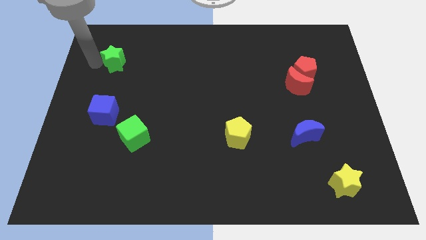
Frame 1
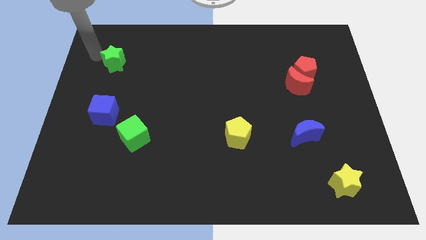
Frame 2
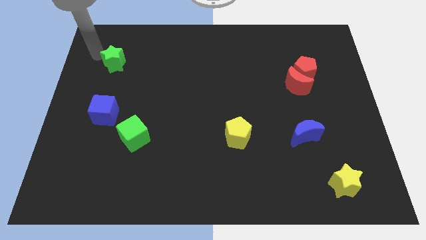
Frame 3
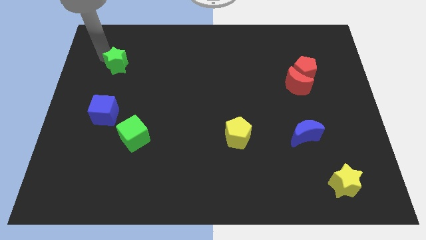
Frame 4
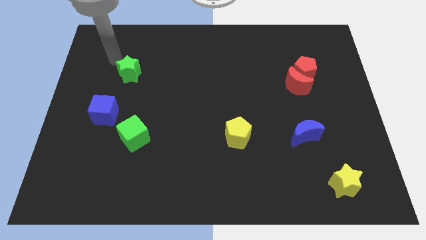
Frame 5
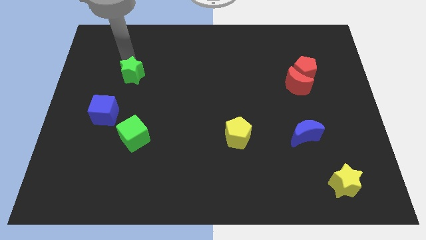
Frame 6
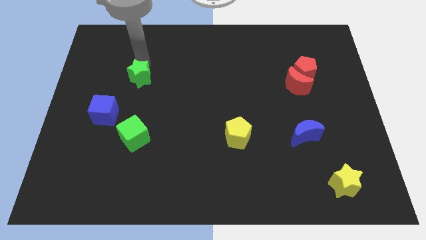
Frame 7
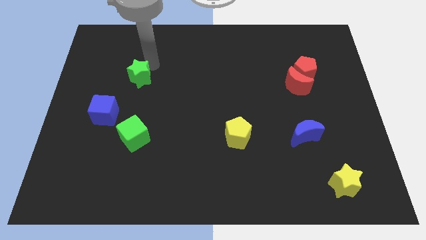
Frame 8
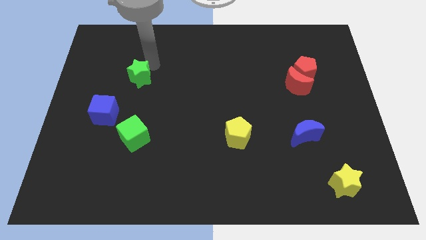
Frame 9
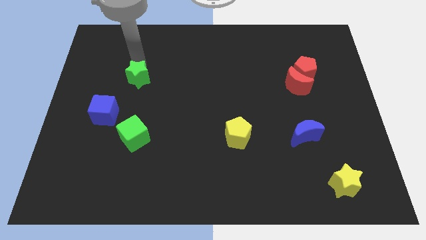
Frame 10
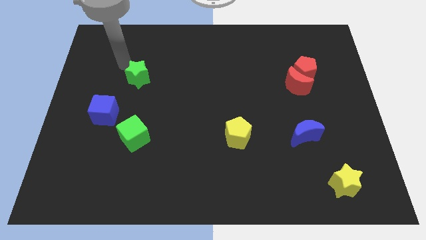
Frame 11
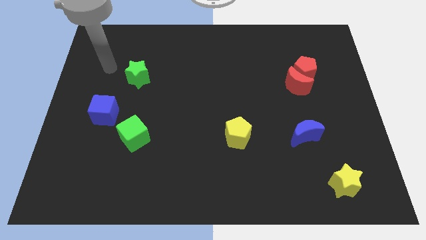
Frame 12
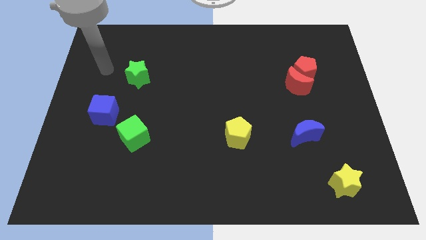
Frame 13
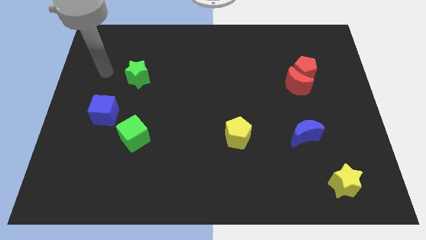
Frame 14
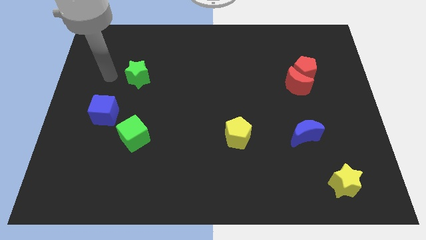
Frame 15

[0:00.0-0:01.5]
place green star to the top right of blue cube

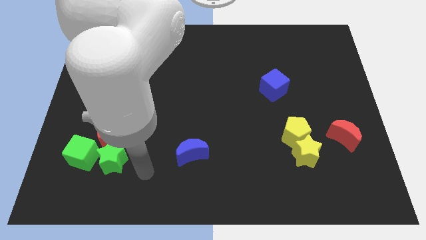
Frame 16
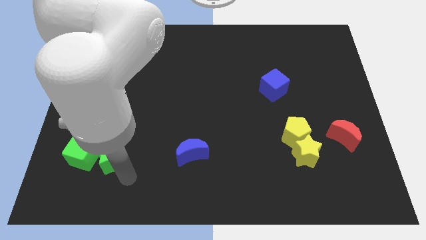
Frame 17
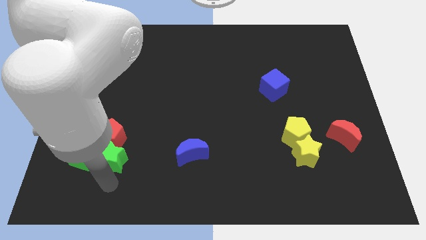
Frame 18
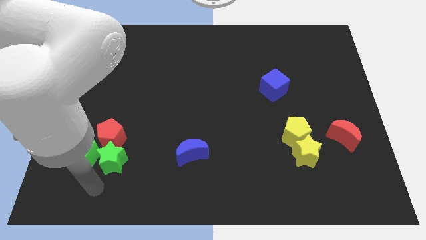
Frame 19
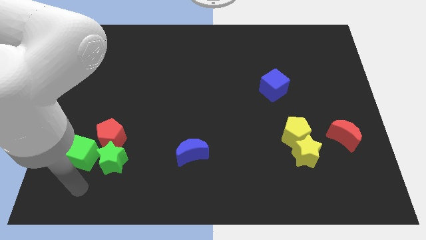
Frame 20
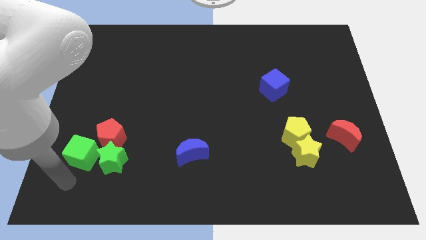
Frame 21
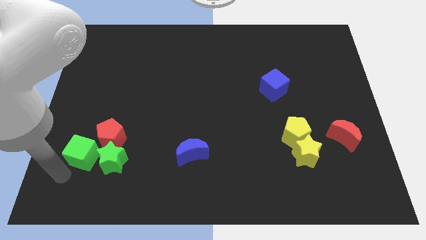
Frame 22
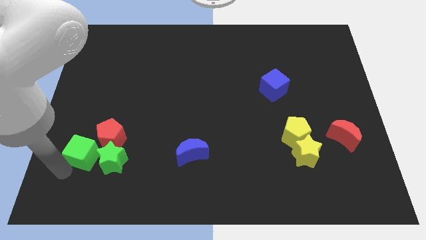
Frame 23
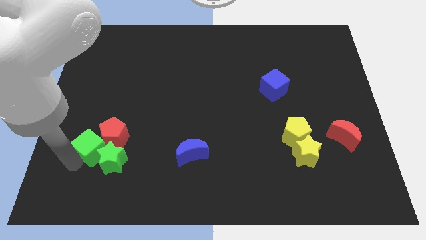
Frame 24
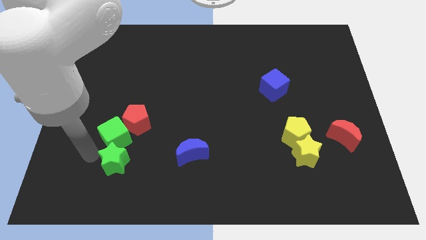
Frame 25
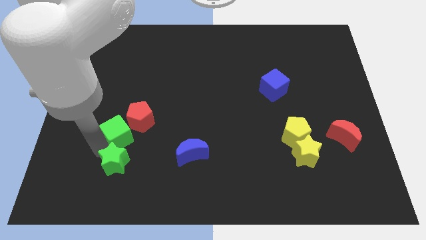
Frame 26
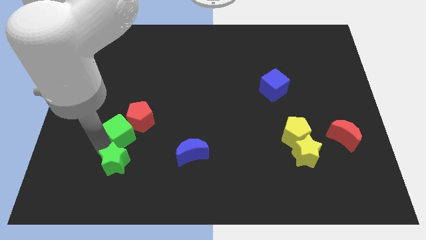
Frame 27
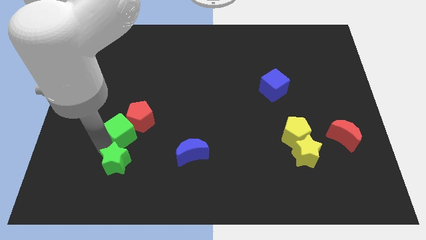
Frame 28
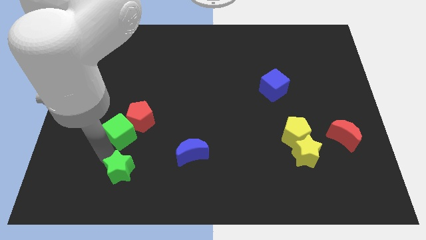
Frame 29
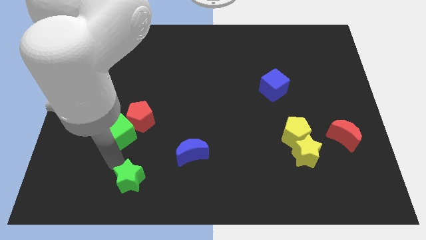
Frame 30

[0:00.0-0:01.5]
separate the green star from the green cube

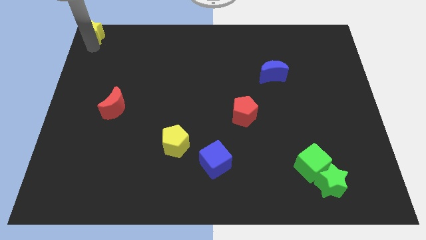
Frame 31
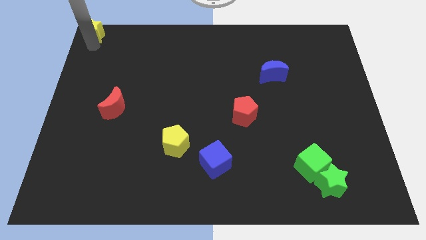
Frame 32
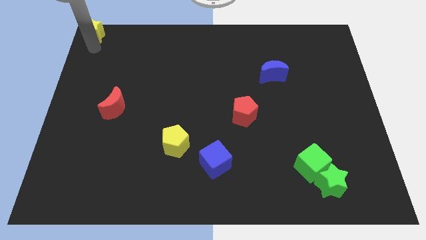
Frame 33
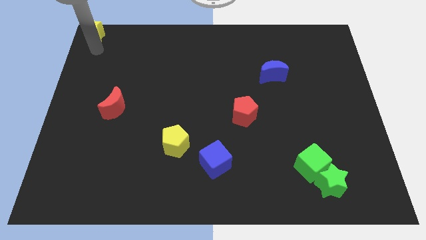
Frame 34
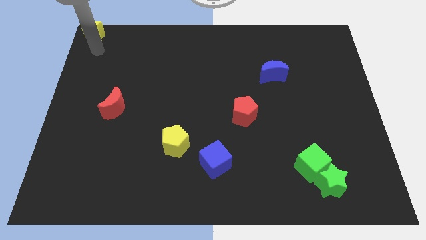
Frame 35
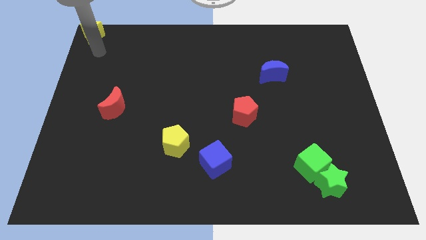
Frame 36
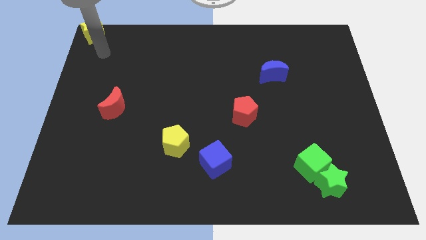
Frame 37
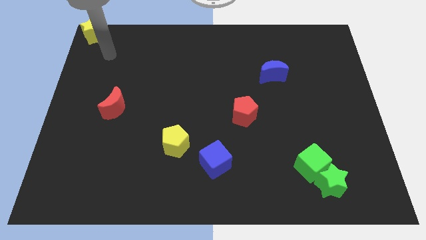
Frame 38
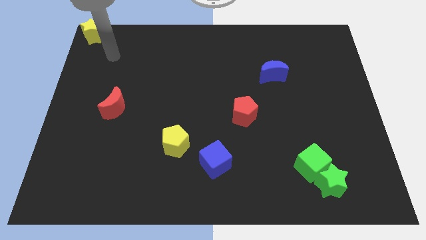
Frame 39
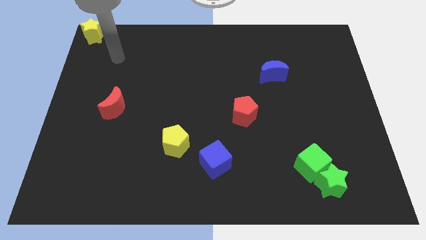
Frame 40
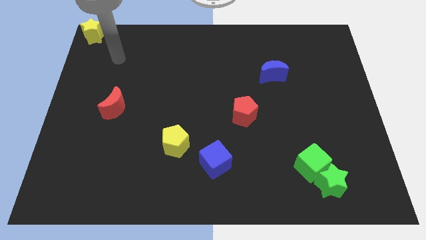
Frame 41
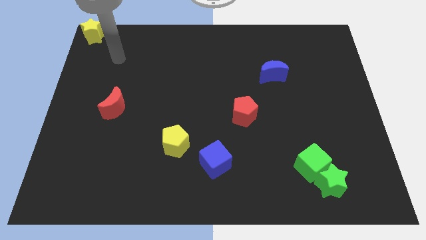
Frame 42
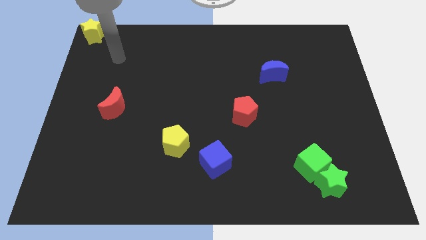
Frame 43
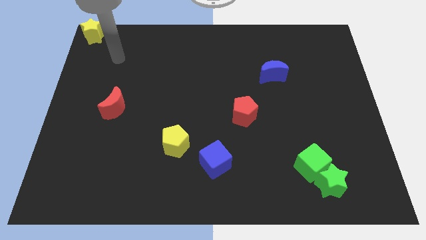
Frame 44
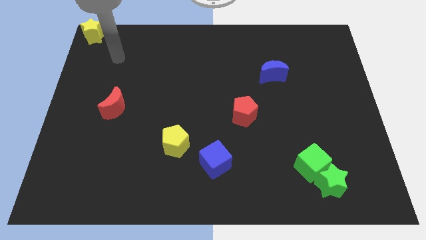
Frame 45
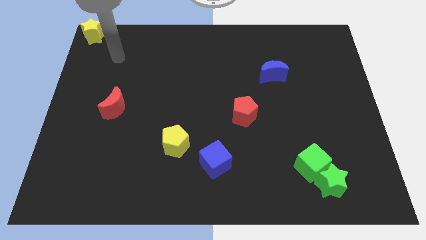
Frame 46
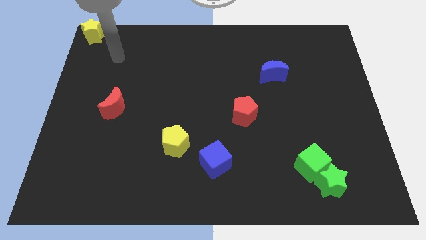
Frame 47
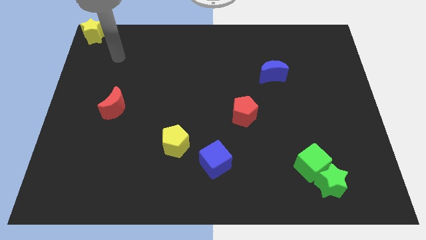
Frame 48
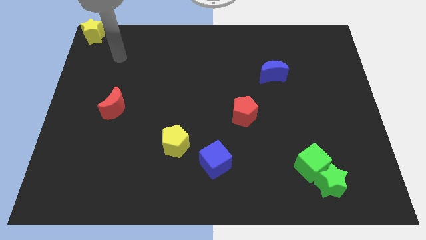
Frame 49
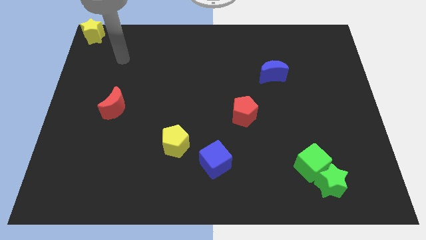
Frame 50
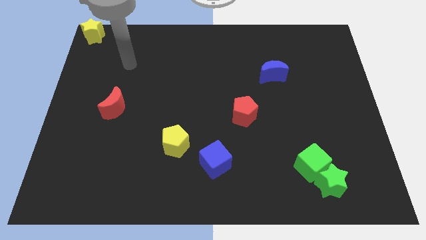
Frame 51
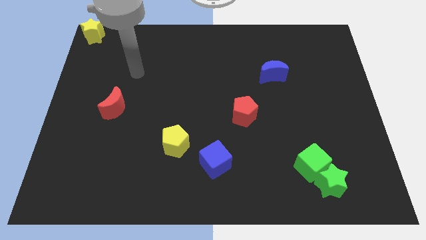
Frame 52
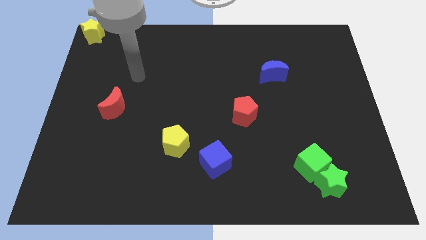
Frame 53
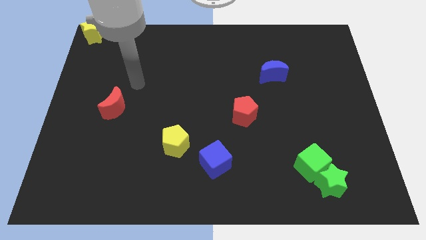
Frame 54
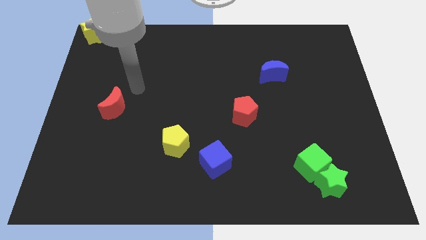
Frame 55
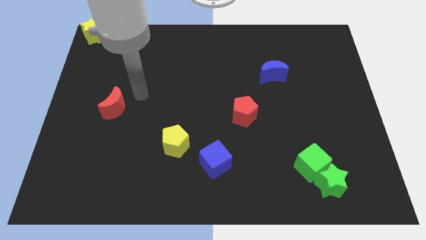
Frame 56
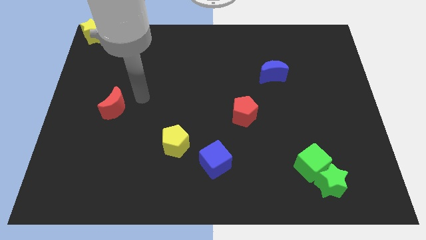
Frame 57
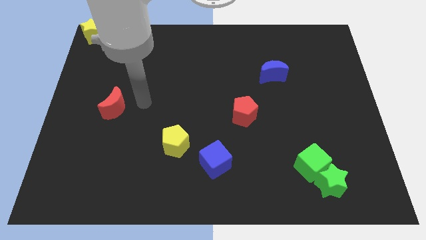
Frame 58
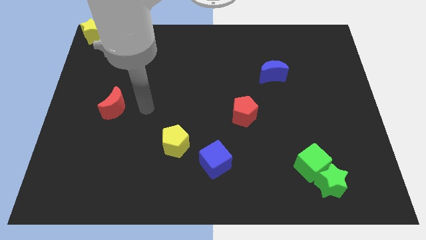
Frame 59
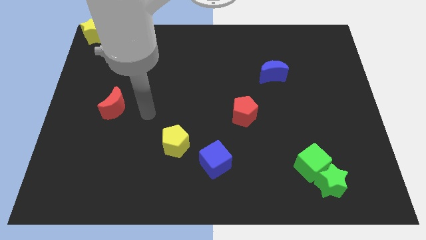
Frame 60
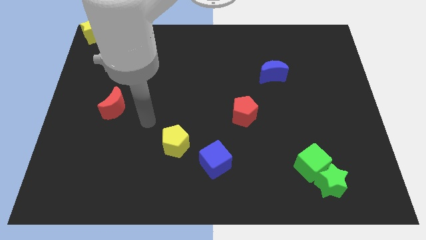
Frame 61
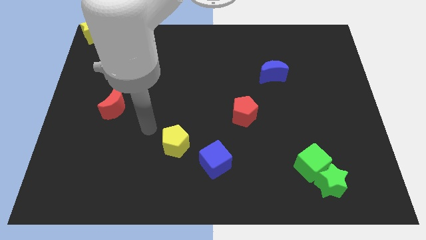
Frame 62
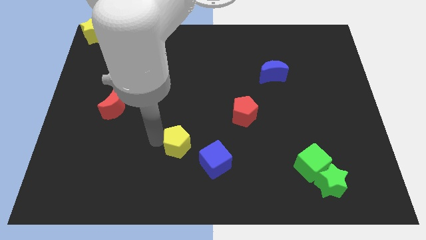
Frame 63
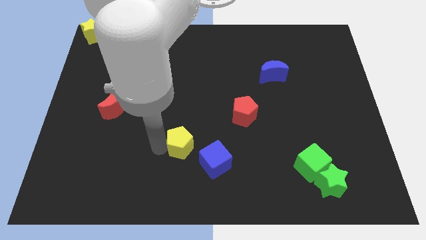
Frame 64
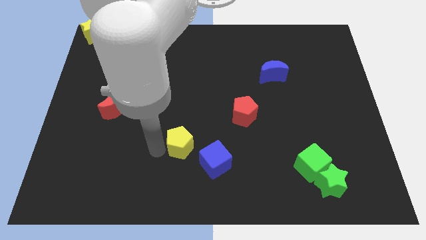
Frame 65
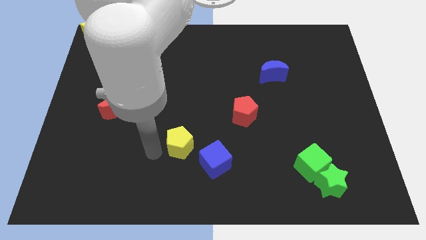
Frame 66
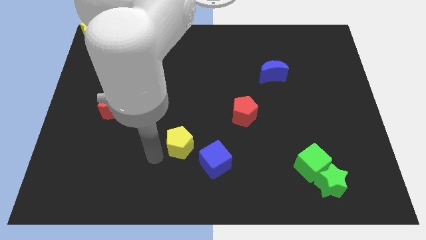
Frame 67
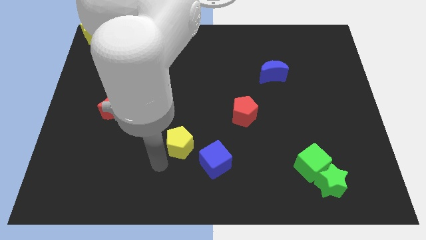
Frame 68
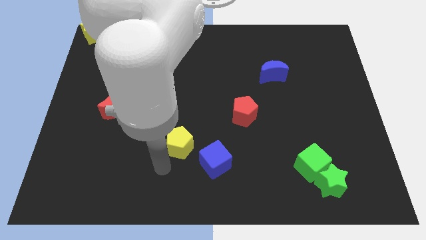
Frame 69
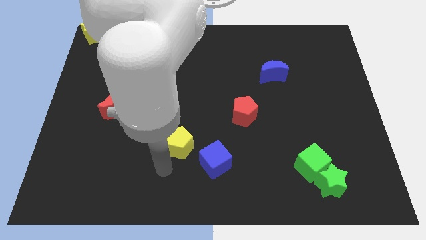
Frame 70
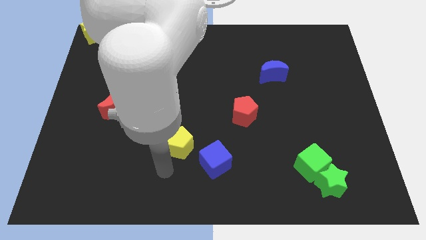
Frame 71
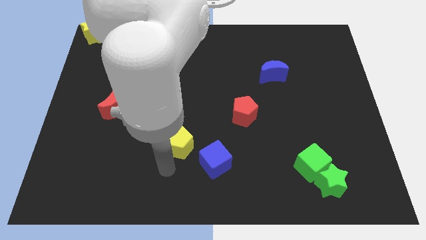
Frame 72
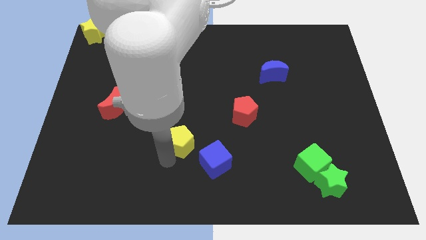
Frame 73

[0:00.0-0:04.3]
move the arm away from the yellow star

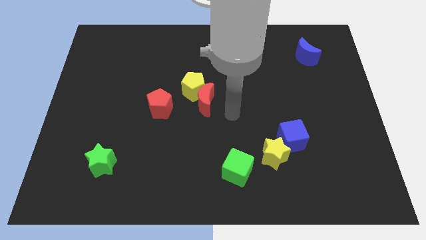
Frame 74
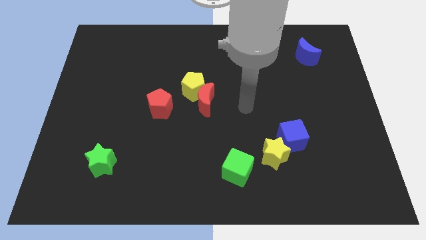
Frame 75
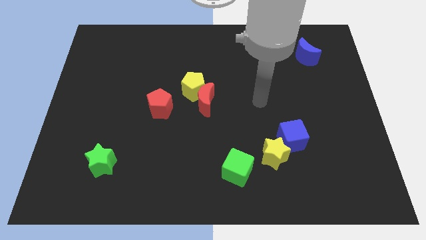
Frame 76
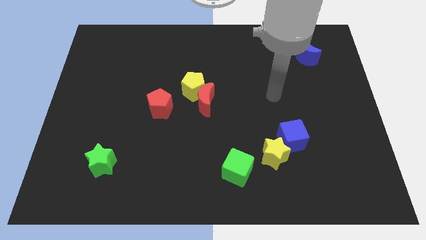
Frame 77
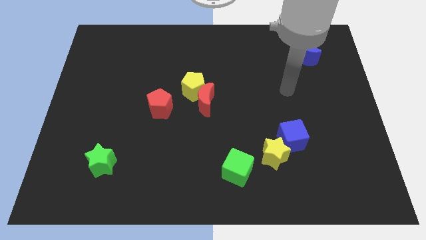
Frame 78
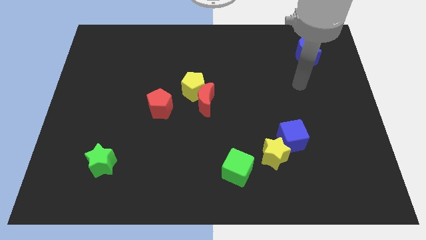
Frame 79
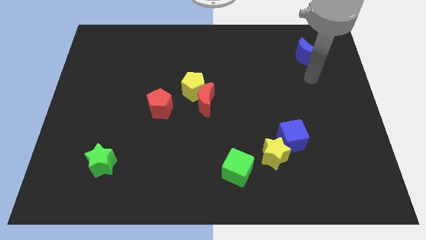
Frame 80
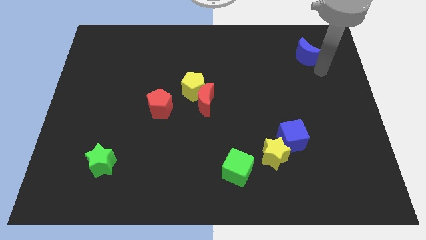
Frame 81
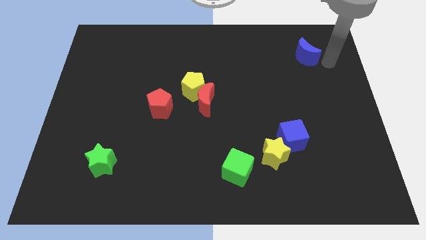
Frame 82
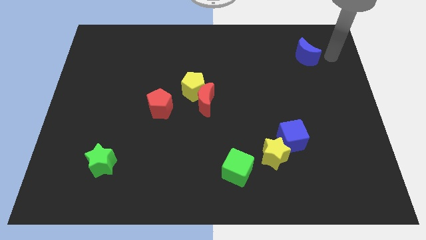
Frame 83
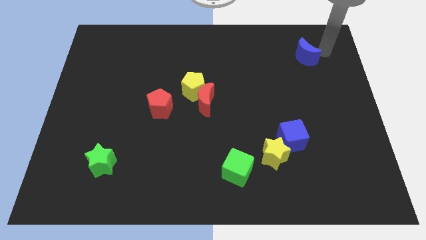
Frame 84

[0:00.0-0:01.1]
slide the arm close to blue moon

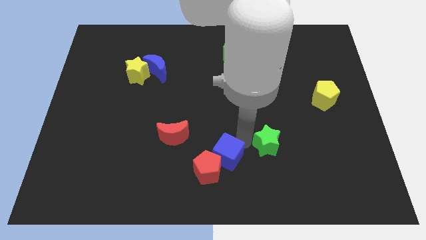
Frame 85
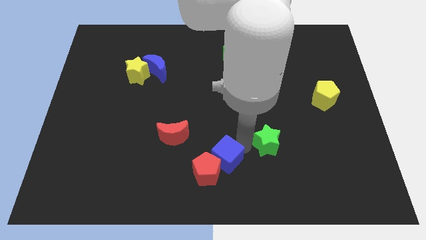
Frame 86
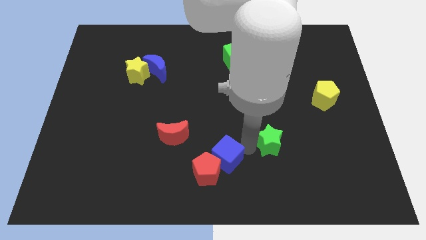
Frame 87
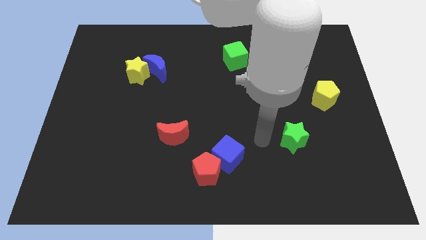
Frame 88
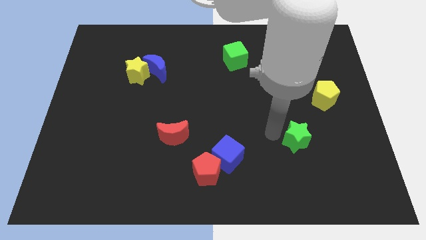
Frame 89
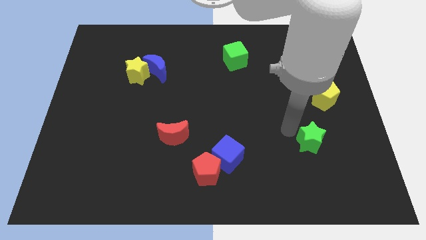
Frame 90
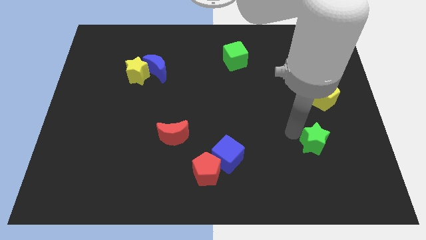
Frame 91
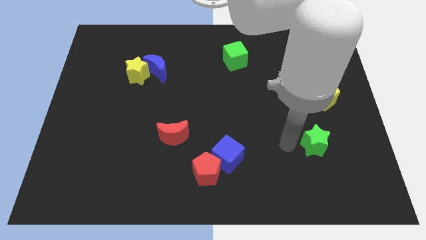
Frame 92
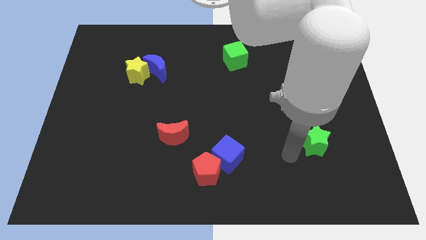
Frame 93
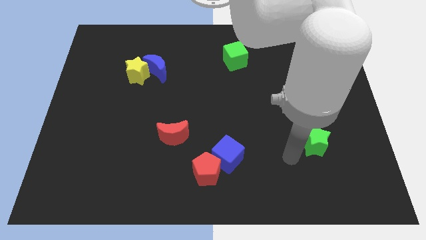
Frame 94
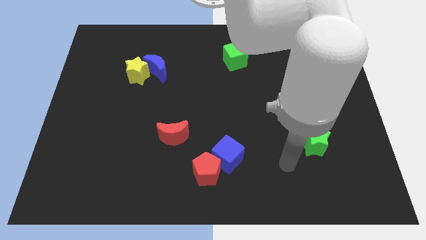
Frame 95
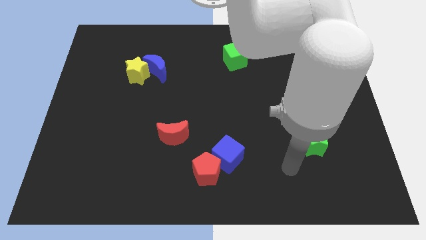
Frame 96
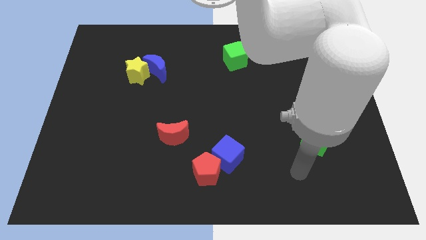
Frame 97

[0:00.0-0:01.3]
separate the green star from the blue cube
